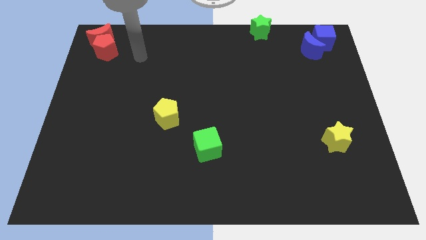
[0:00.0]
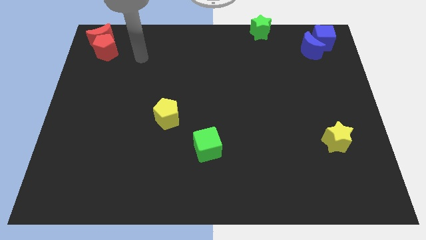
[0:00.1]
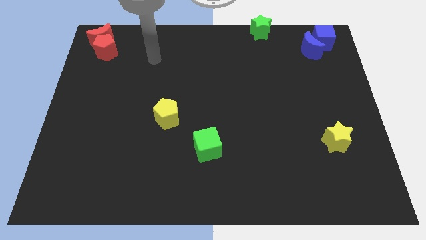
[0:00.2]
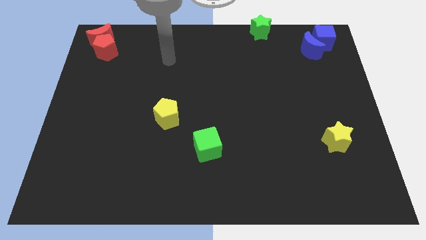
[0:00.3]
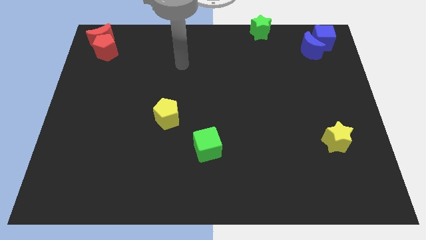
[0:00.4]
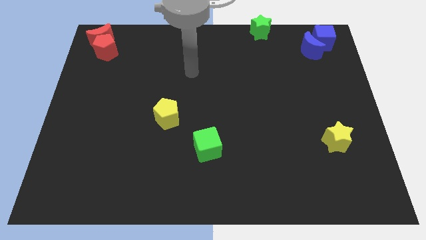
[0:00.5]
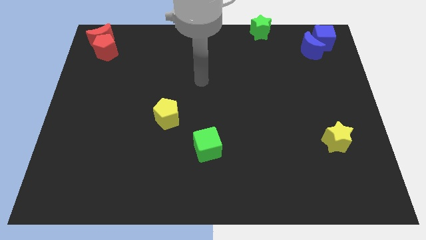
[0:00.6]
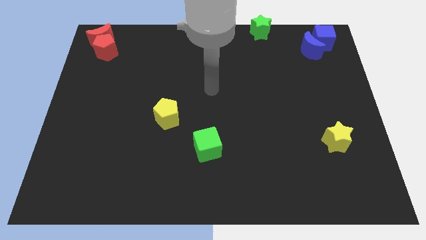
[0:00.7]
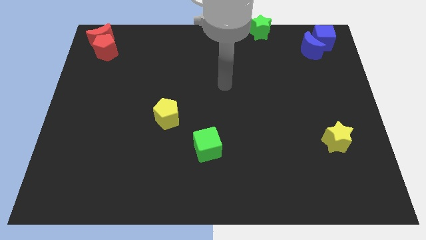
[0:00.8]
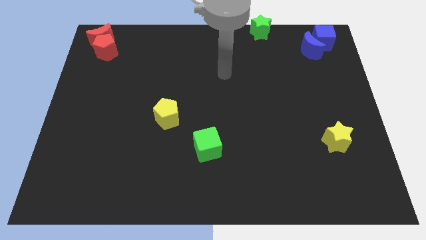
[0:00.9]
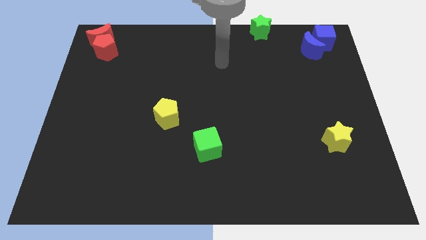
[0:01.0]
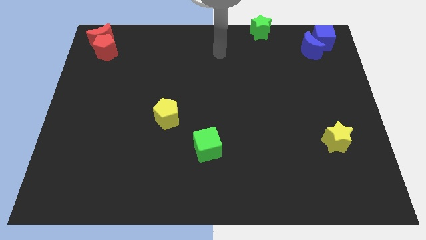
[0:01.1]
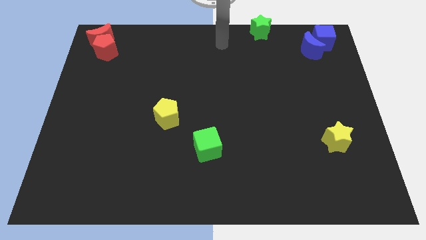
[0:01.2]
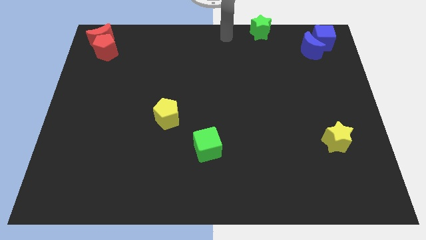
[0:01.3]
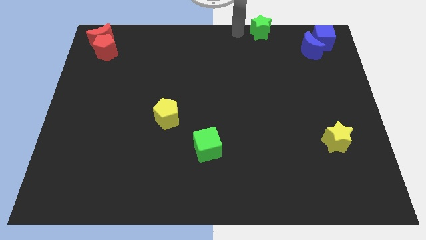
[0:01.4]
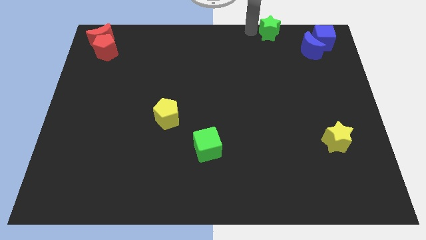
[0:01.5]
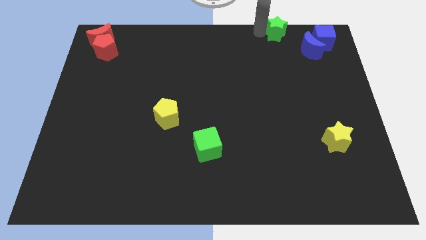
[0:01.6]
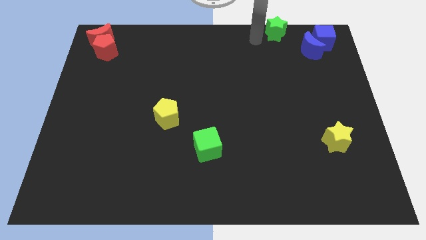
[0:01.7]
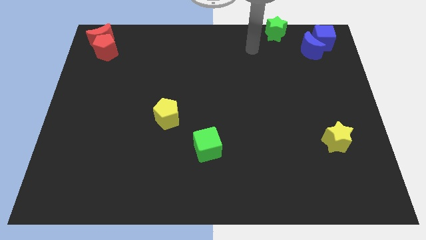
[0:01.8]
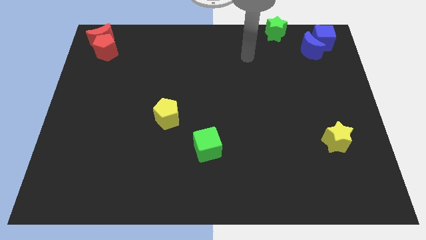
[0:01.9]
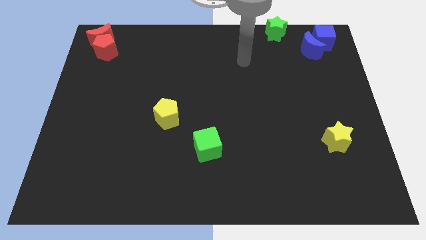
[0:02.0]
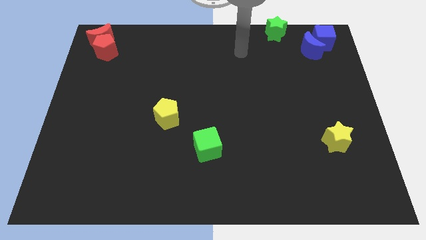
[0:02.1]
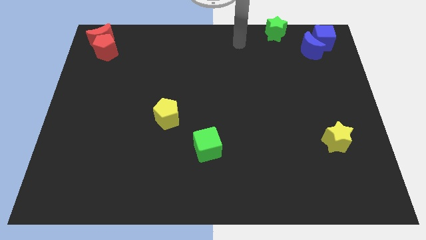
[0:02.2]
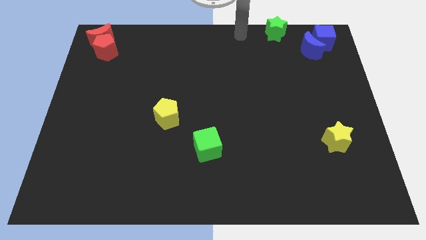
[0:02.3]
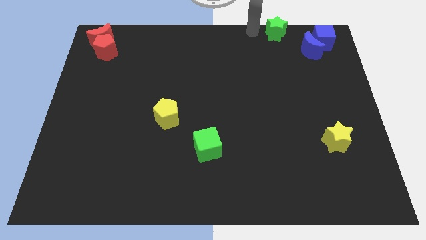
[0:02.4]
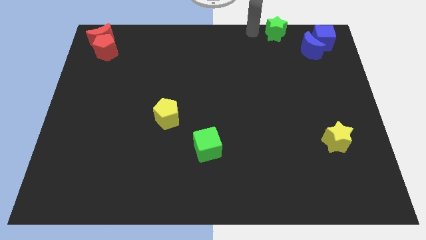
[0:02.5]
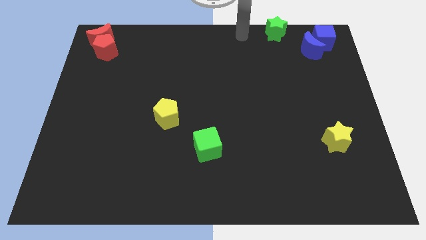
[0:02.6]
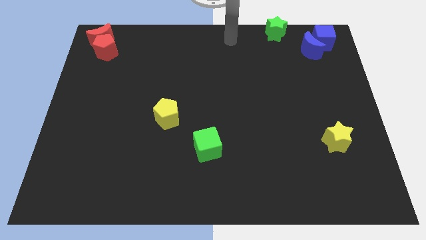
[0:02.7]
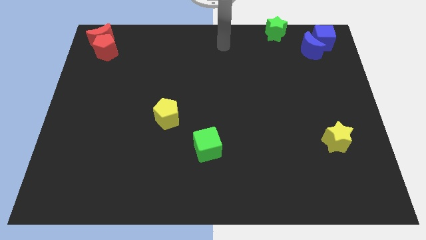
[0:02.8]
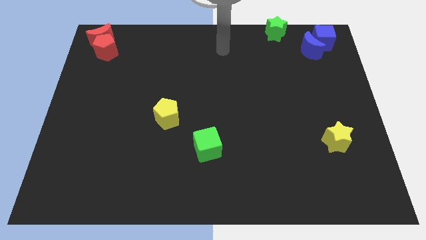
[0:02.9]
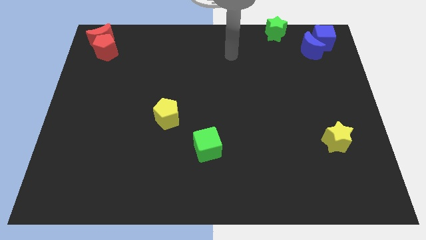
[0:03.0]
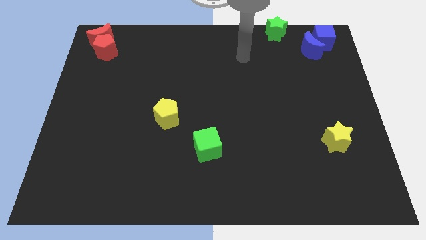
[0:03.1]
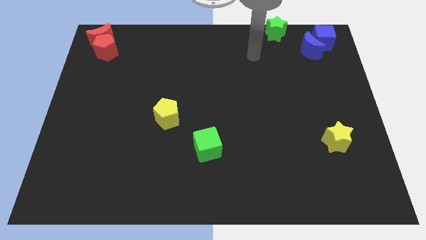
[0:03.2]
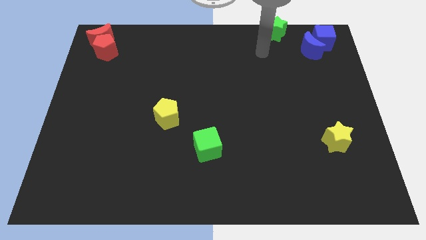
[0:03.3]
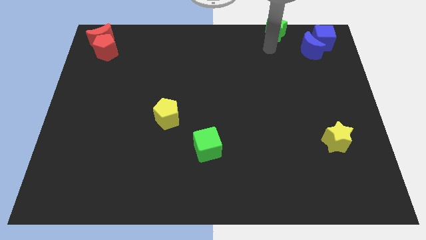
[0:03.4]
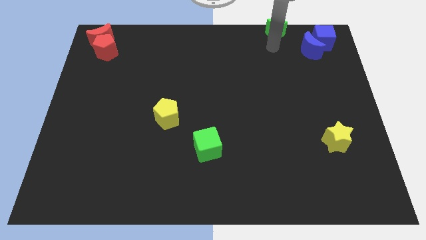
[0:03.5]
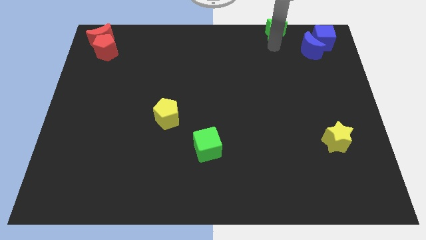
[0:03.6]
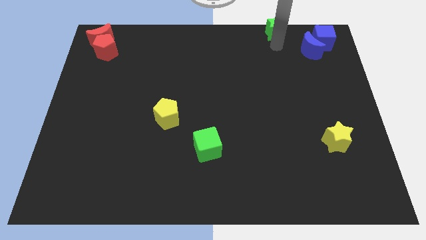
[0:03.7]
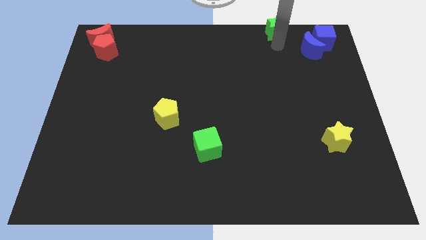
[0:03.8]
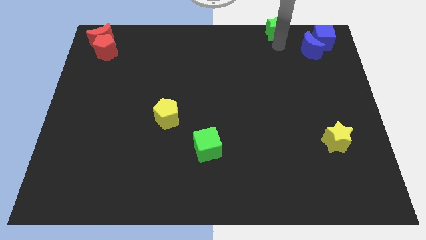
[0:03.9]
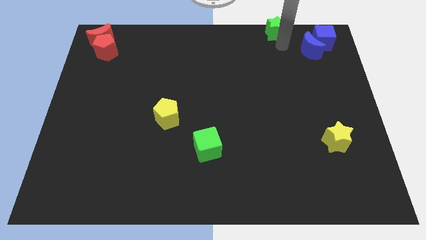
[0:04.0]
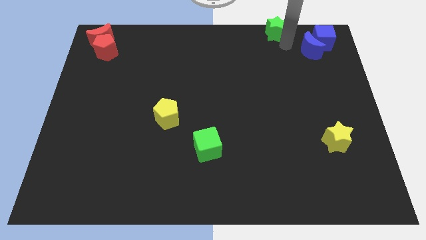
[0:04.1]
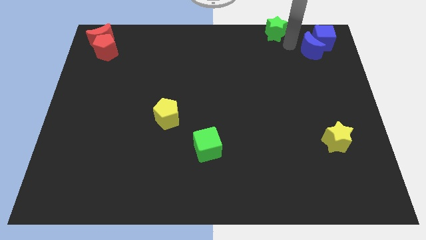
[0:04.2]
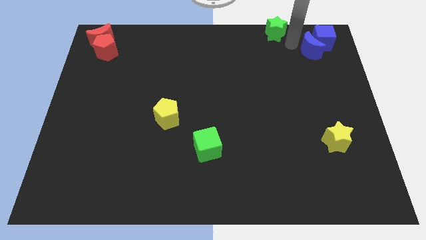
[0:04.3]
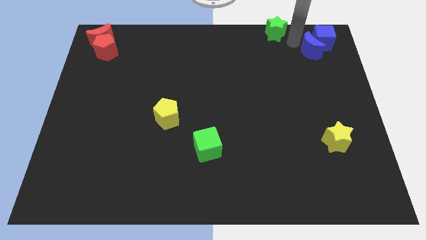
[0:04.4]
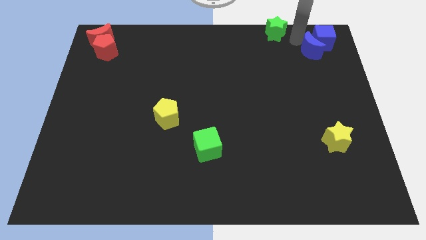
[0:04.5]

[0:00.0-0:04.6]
move the green star slightly to the right

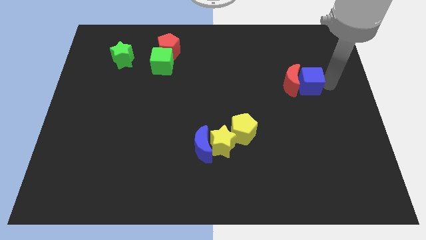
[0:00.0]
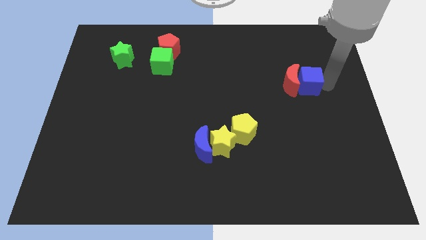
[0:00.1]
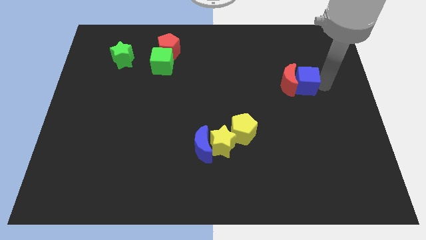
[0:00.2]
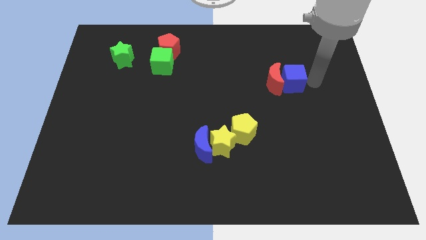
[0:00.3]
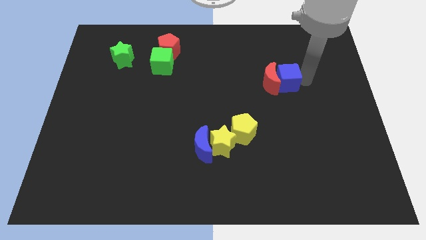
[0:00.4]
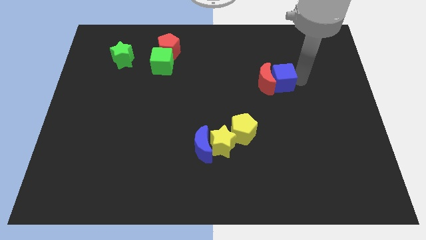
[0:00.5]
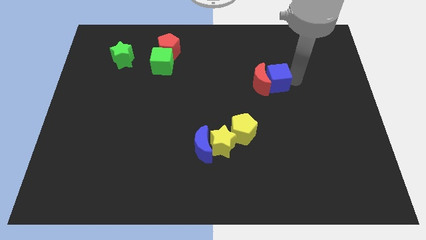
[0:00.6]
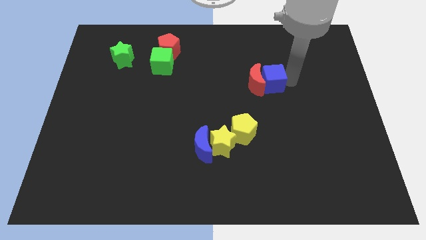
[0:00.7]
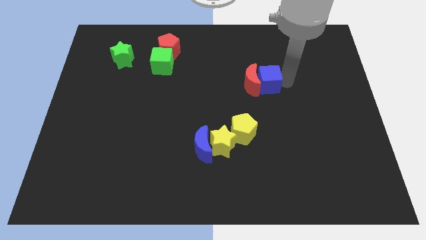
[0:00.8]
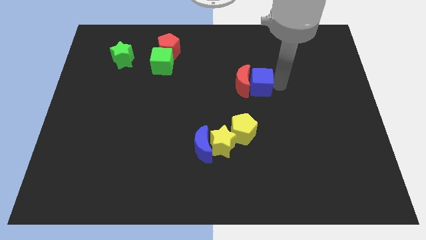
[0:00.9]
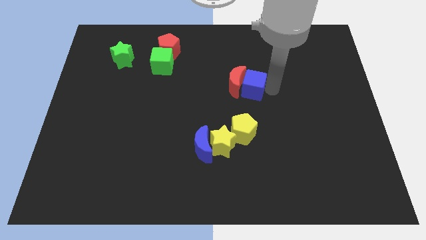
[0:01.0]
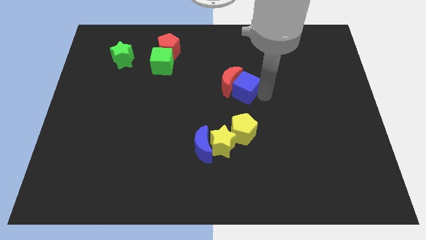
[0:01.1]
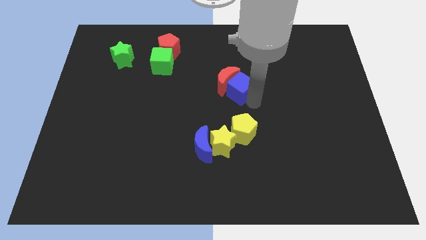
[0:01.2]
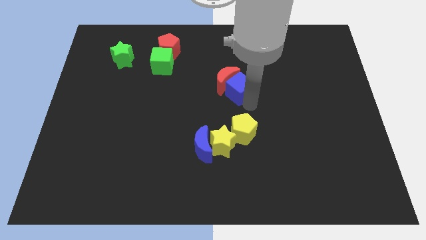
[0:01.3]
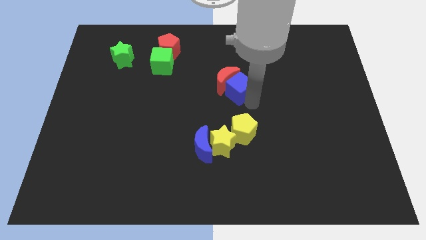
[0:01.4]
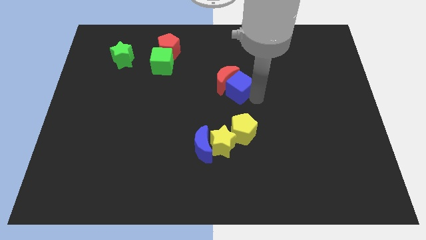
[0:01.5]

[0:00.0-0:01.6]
move the blue cube and red moon towards the center

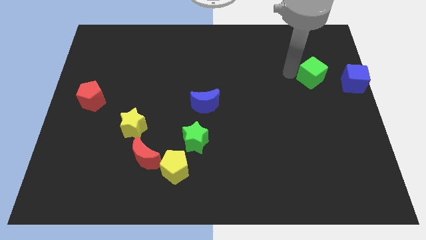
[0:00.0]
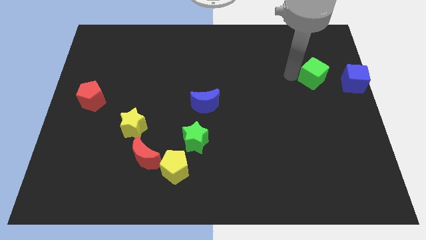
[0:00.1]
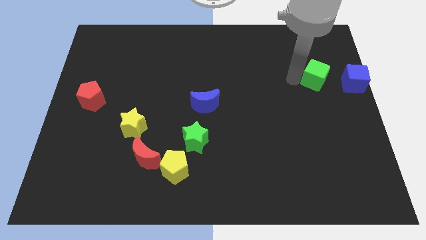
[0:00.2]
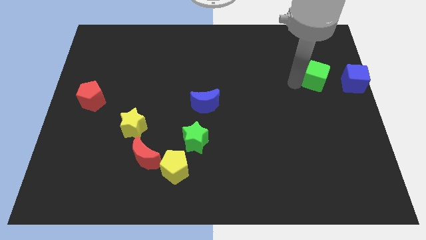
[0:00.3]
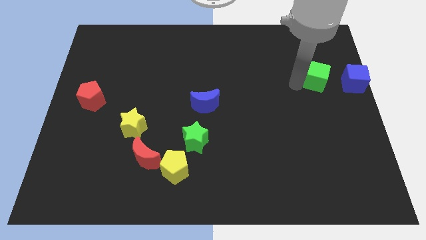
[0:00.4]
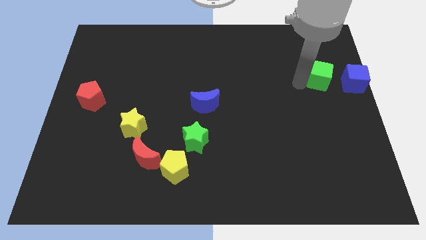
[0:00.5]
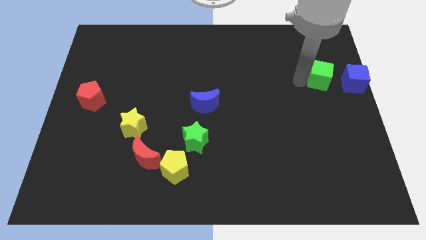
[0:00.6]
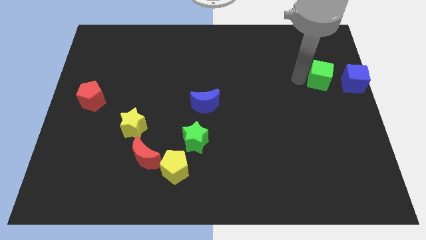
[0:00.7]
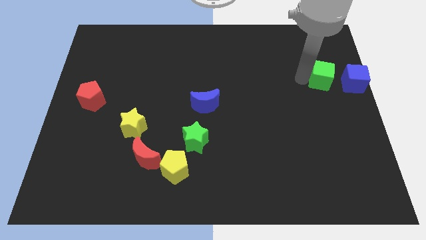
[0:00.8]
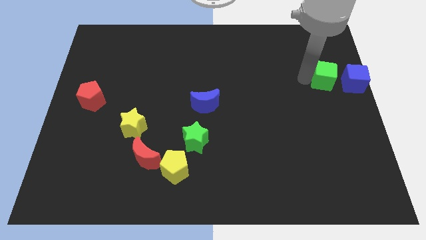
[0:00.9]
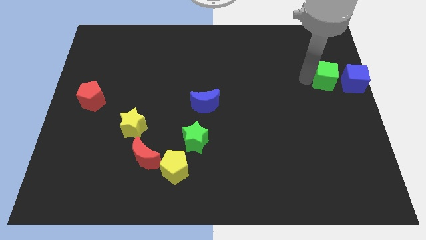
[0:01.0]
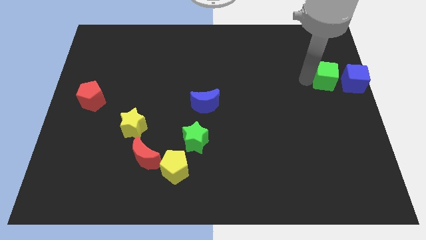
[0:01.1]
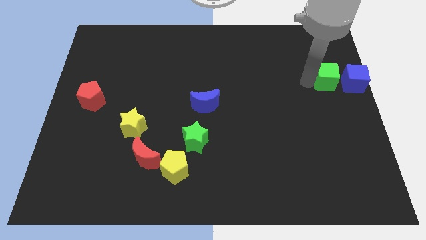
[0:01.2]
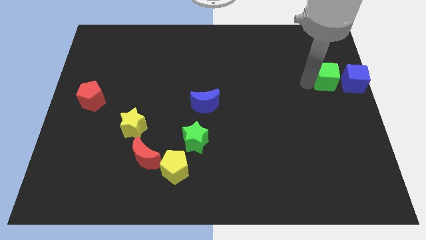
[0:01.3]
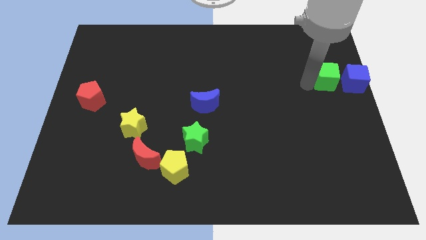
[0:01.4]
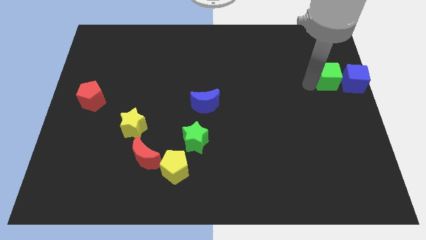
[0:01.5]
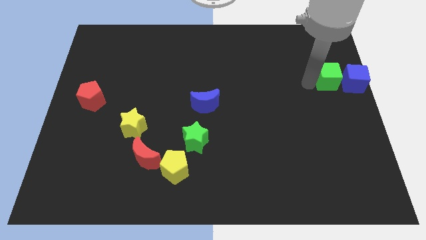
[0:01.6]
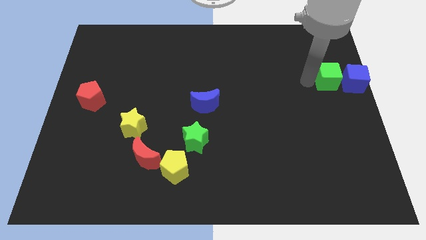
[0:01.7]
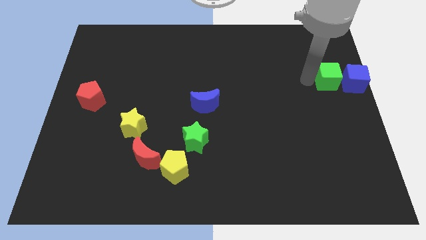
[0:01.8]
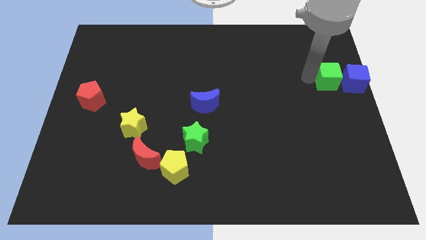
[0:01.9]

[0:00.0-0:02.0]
push the green cube into the blue cube

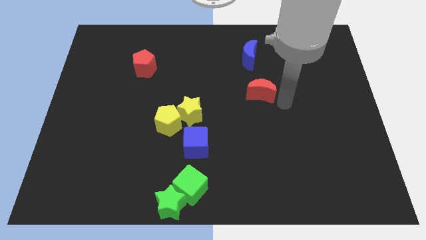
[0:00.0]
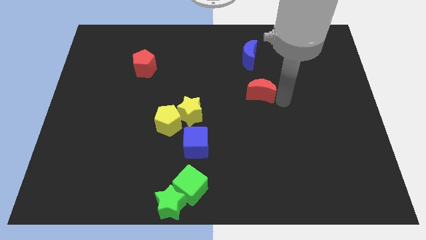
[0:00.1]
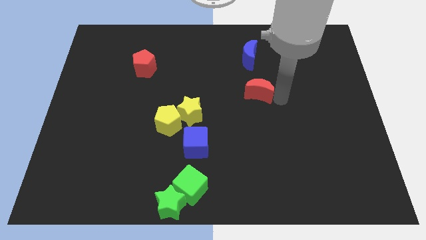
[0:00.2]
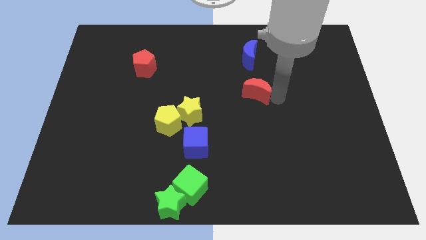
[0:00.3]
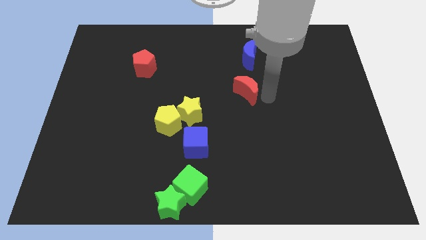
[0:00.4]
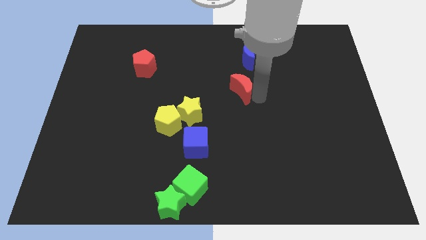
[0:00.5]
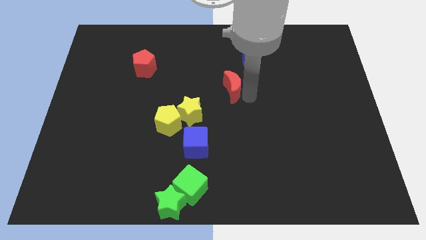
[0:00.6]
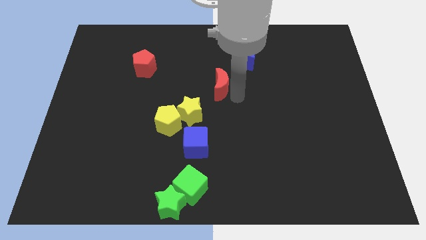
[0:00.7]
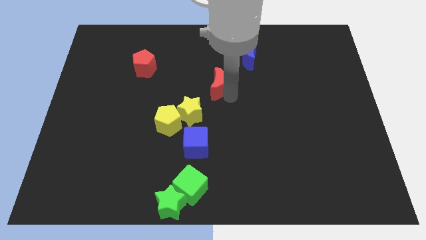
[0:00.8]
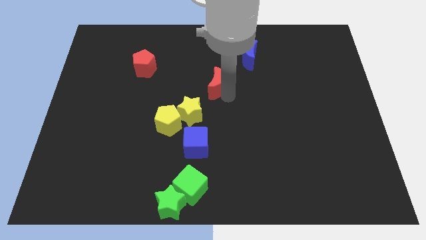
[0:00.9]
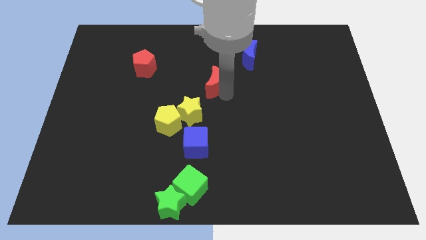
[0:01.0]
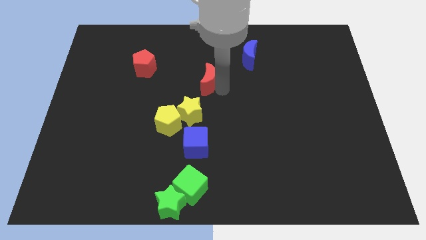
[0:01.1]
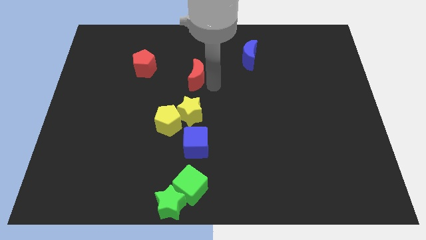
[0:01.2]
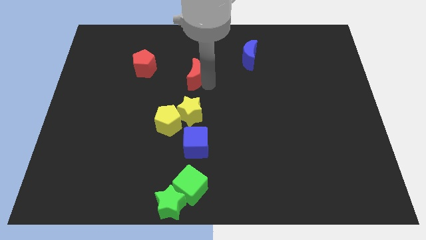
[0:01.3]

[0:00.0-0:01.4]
place the red crescent above the yellow star
